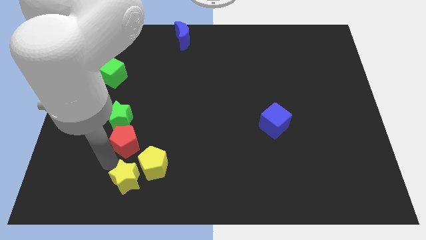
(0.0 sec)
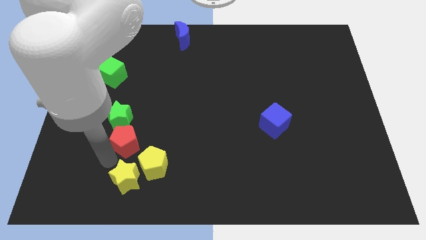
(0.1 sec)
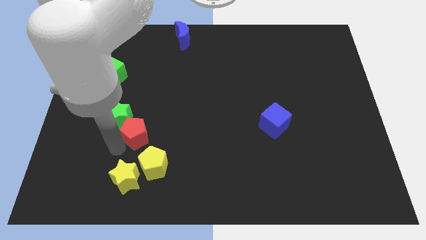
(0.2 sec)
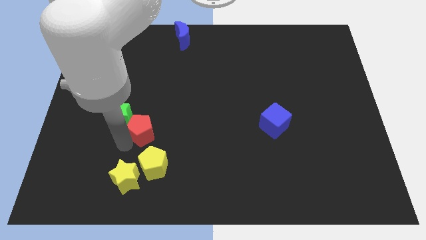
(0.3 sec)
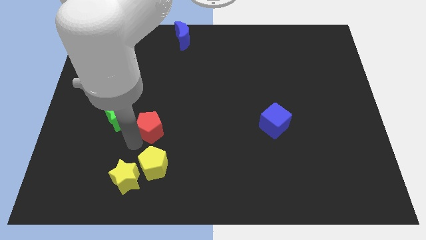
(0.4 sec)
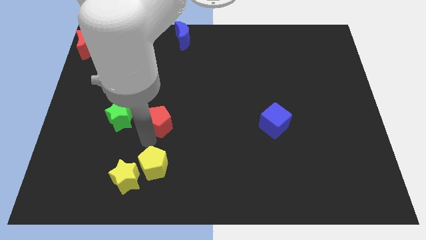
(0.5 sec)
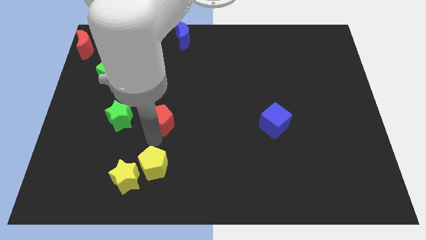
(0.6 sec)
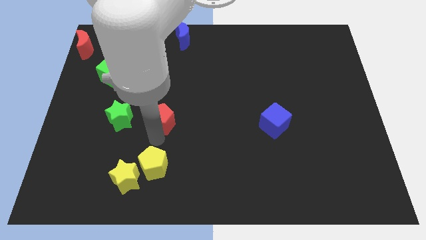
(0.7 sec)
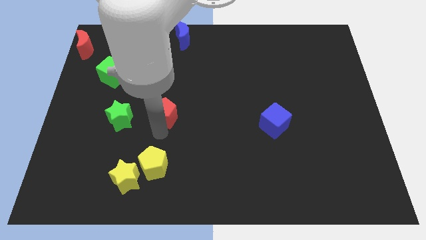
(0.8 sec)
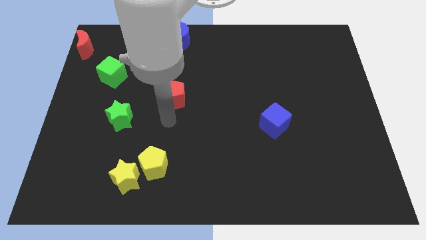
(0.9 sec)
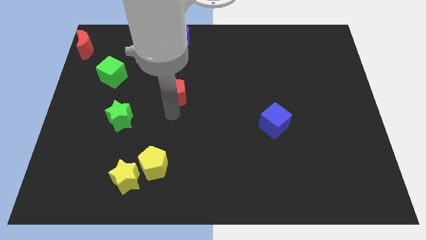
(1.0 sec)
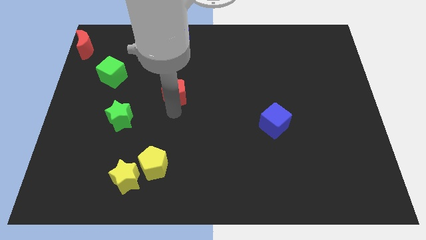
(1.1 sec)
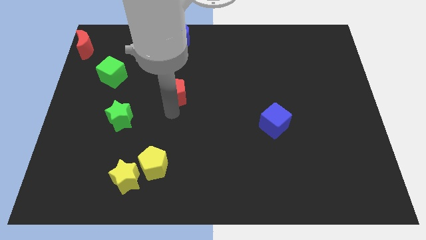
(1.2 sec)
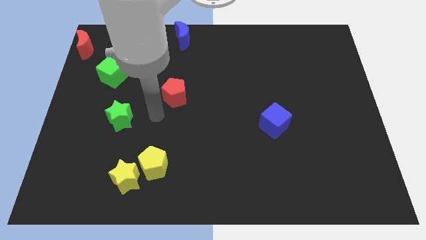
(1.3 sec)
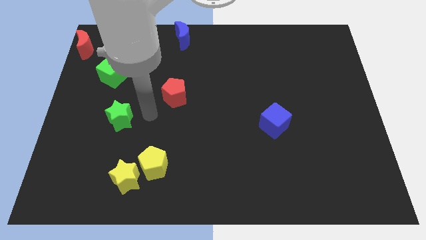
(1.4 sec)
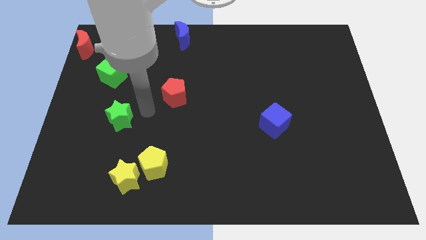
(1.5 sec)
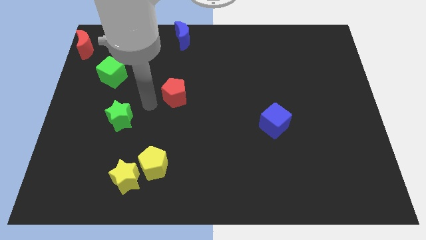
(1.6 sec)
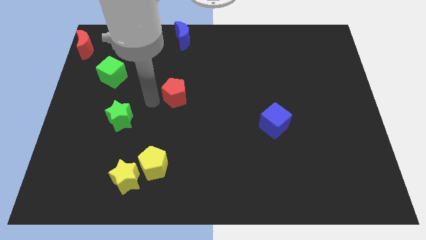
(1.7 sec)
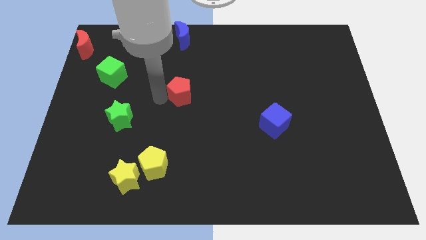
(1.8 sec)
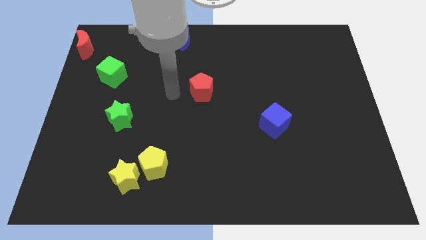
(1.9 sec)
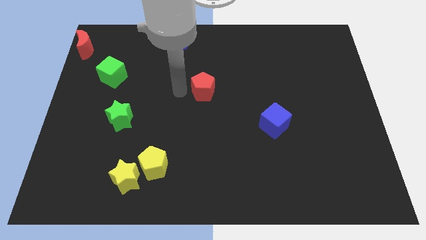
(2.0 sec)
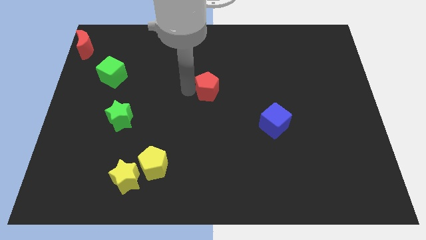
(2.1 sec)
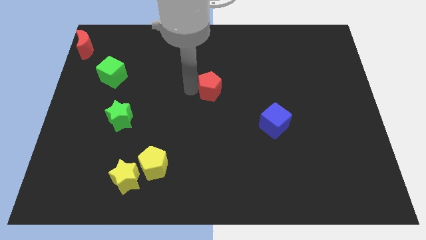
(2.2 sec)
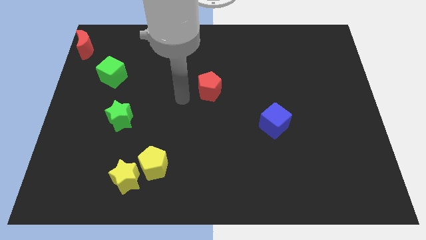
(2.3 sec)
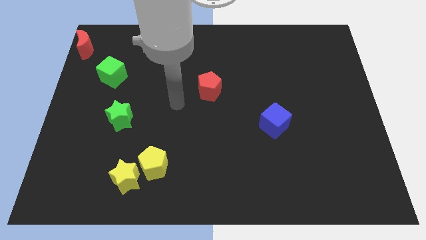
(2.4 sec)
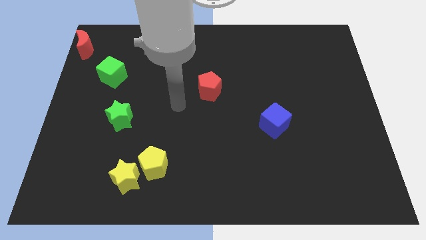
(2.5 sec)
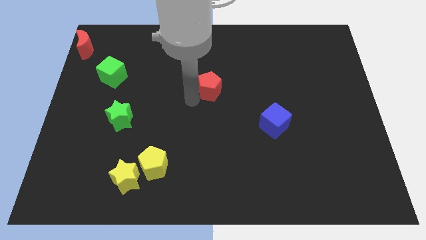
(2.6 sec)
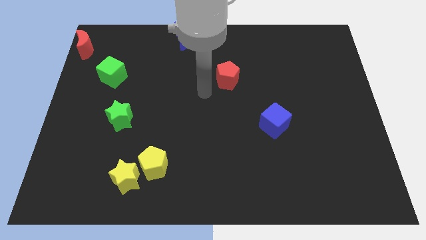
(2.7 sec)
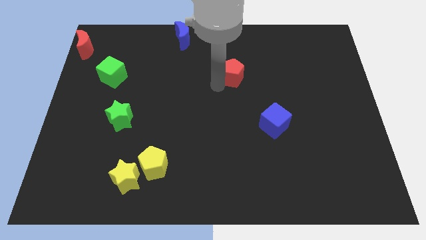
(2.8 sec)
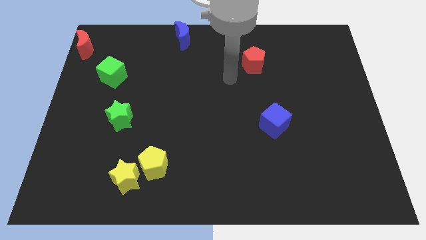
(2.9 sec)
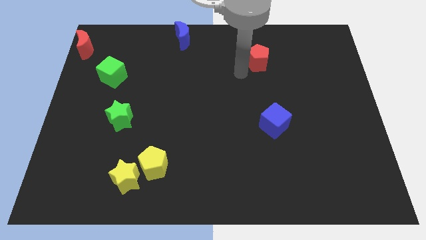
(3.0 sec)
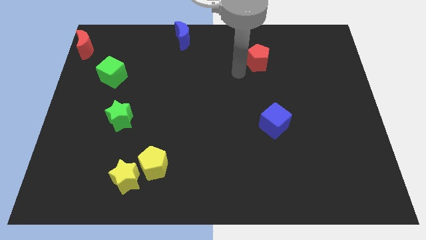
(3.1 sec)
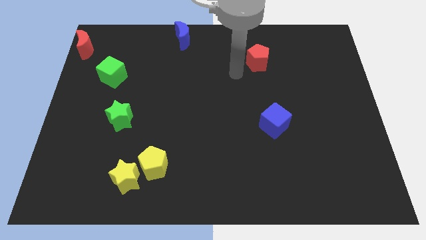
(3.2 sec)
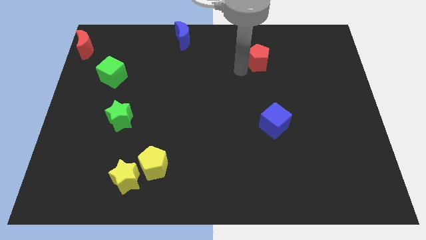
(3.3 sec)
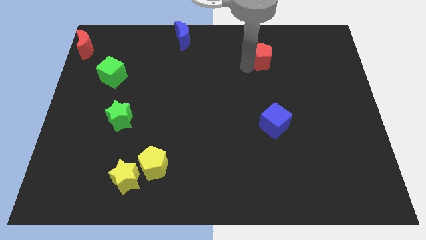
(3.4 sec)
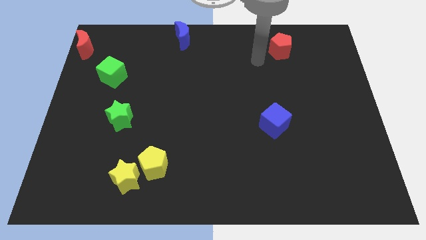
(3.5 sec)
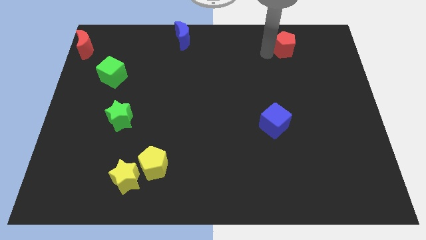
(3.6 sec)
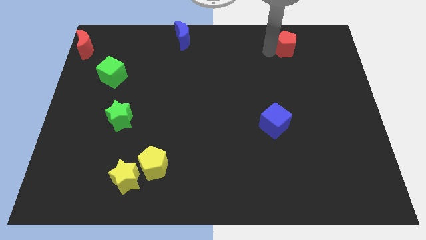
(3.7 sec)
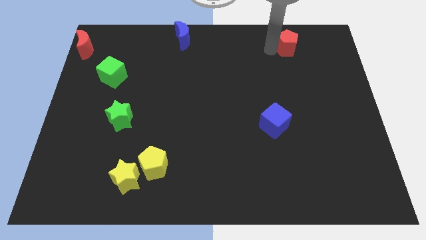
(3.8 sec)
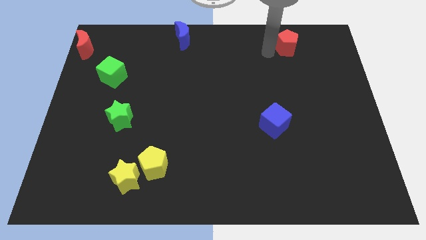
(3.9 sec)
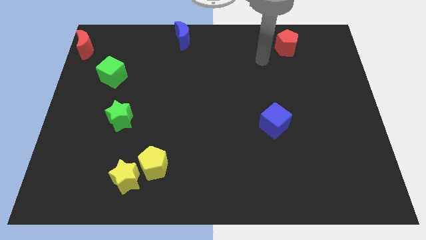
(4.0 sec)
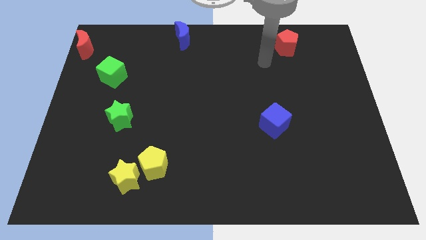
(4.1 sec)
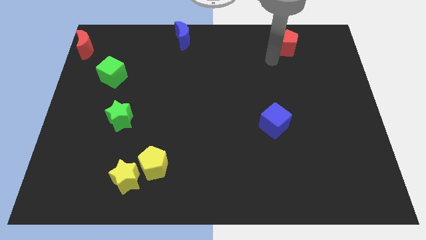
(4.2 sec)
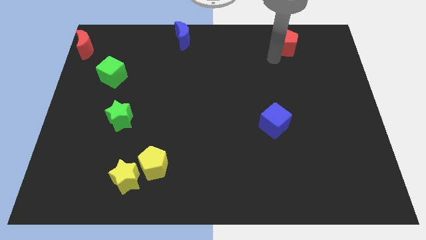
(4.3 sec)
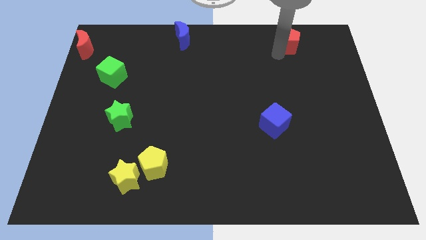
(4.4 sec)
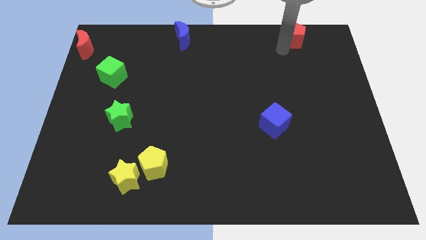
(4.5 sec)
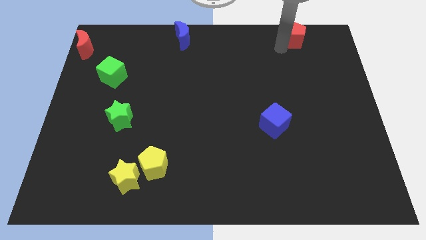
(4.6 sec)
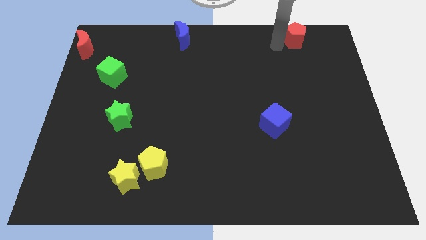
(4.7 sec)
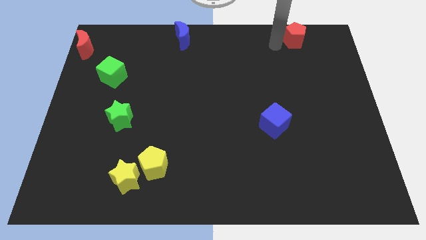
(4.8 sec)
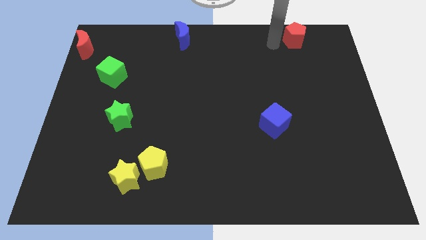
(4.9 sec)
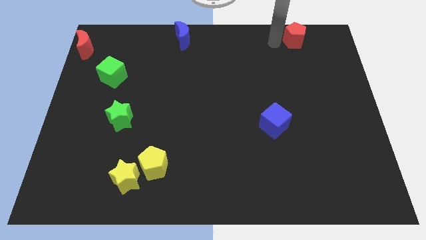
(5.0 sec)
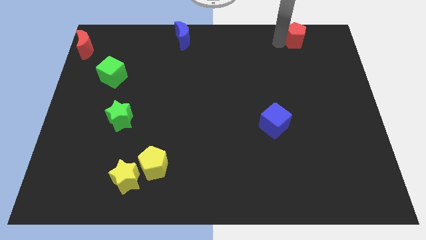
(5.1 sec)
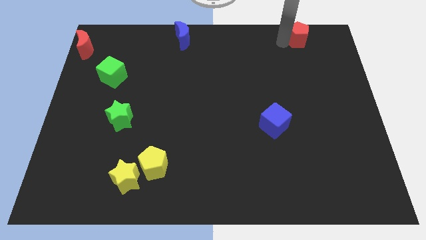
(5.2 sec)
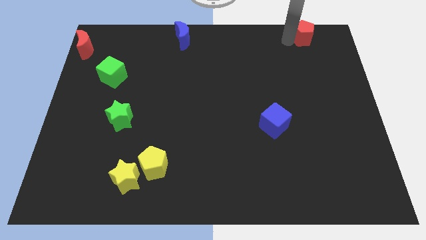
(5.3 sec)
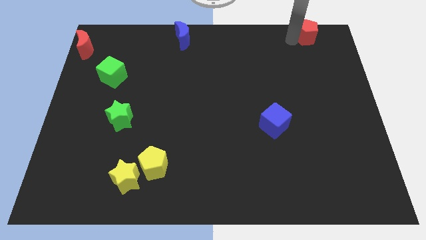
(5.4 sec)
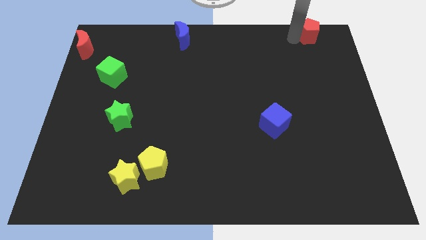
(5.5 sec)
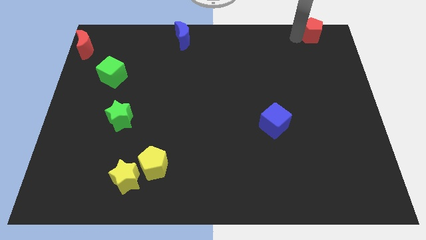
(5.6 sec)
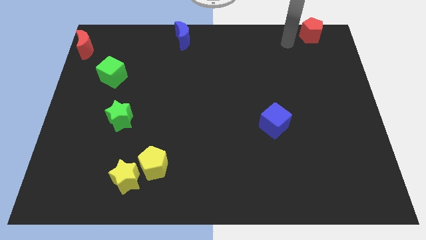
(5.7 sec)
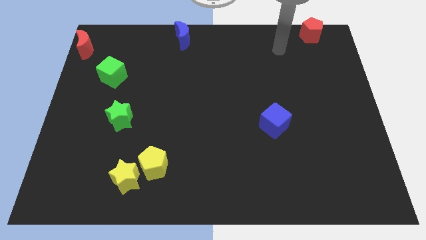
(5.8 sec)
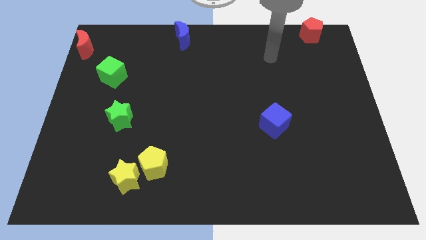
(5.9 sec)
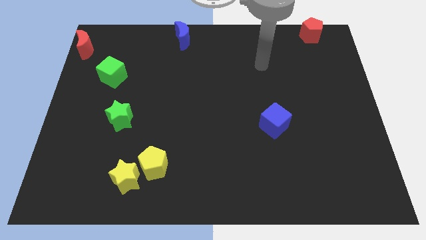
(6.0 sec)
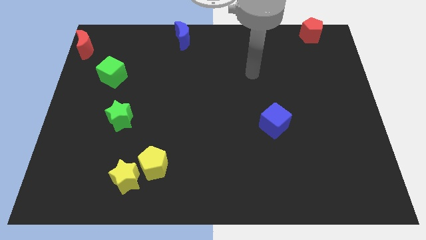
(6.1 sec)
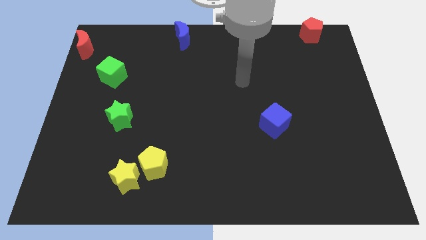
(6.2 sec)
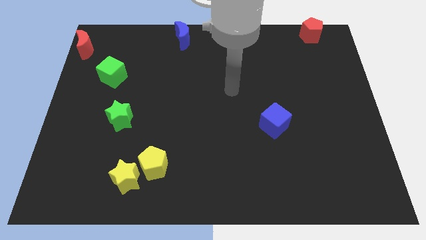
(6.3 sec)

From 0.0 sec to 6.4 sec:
place the red pentagon right to the blue moon

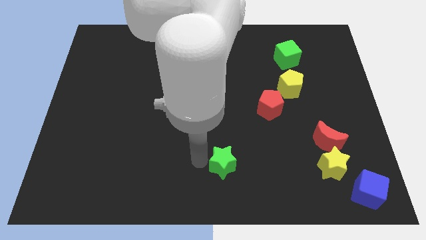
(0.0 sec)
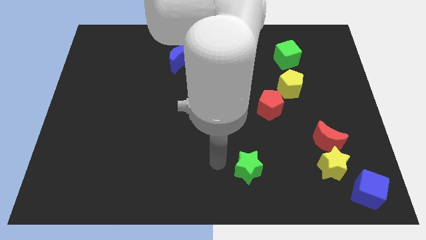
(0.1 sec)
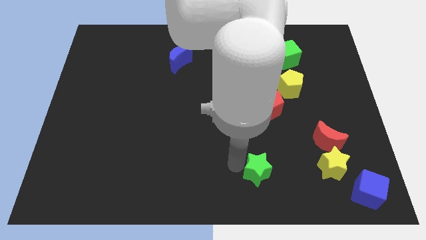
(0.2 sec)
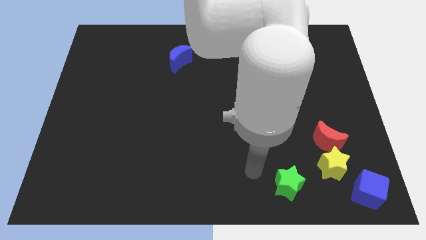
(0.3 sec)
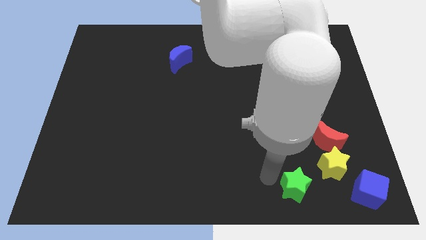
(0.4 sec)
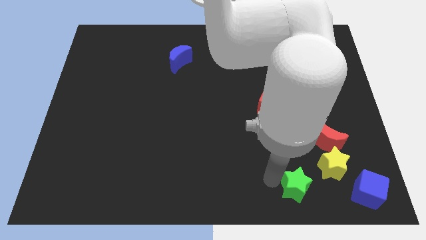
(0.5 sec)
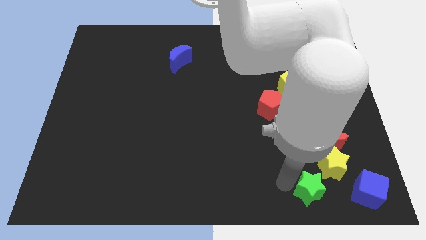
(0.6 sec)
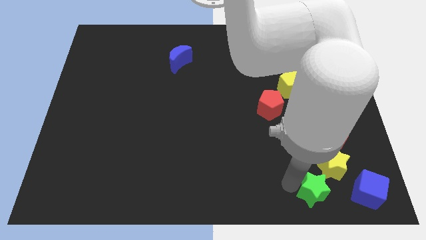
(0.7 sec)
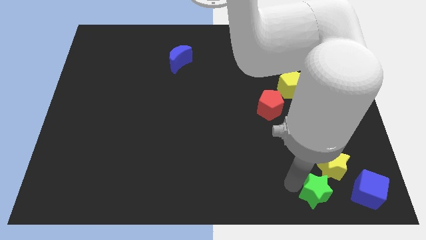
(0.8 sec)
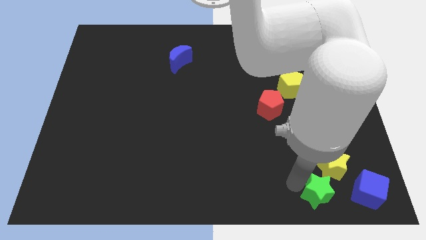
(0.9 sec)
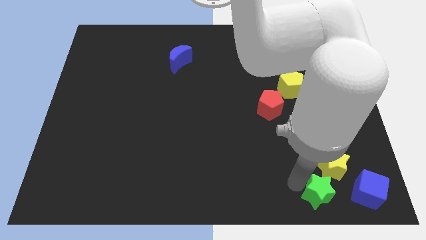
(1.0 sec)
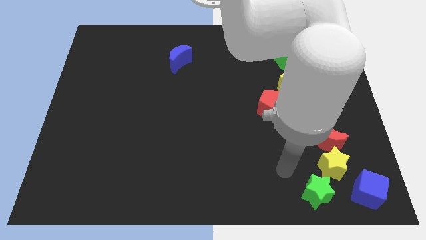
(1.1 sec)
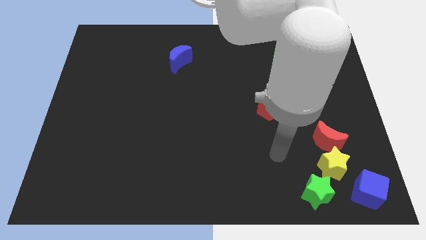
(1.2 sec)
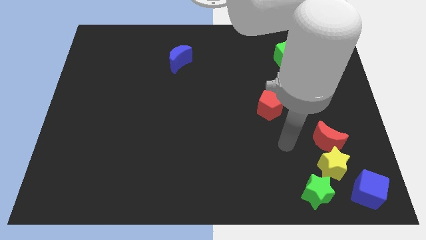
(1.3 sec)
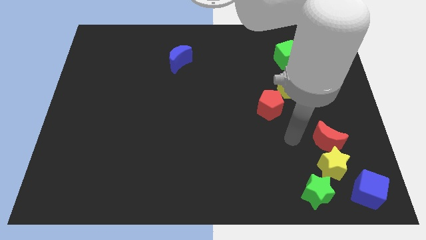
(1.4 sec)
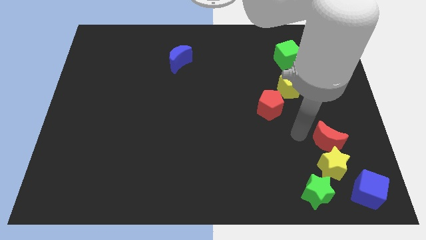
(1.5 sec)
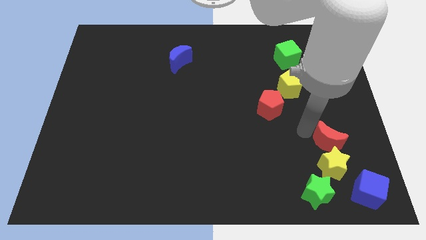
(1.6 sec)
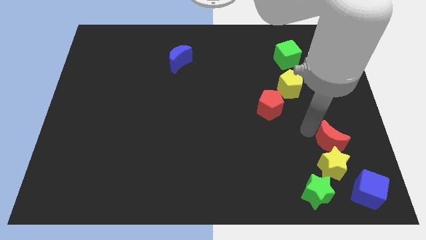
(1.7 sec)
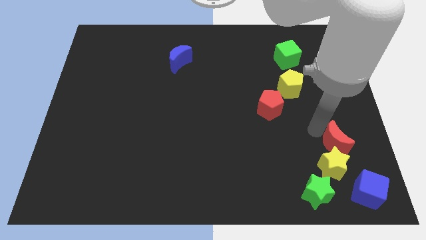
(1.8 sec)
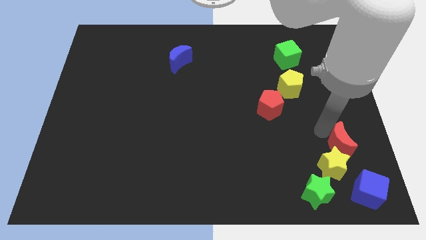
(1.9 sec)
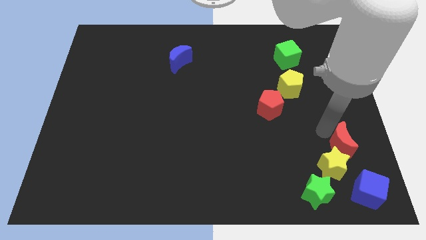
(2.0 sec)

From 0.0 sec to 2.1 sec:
push the green to the bottom right corner of the board

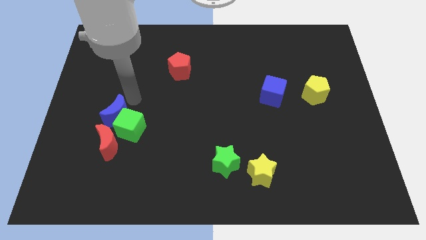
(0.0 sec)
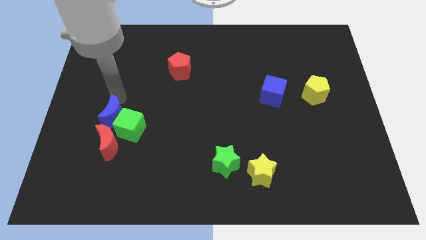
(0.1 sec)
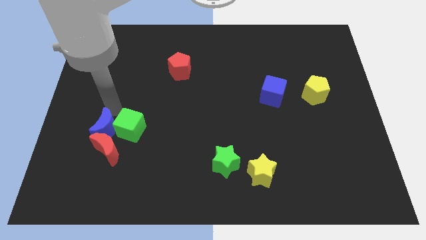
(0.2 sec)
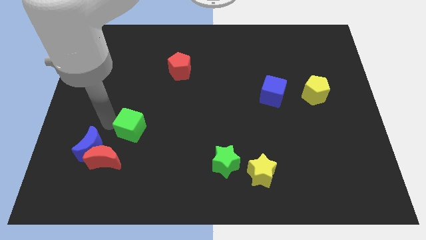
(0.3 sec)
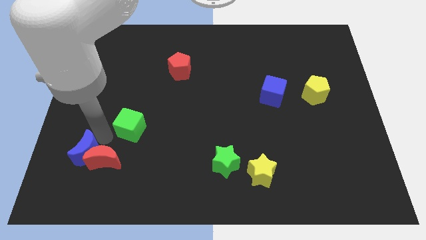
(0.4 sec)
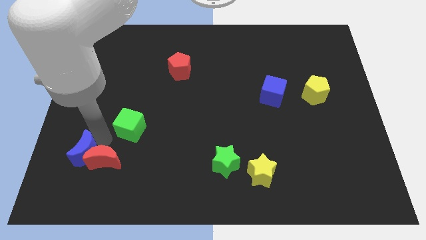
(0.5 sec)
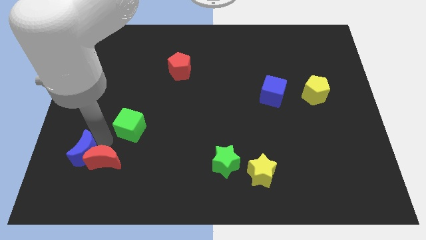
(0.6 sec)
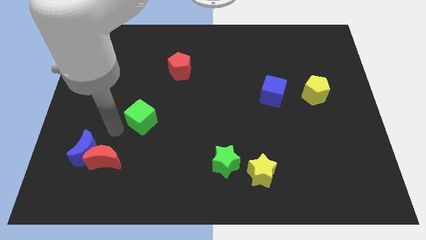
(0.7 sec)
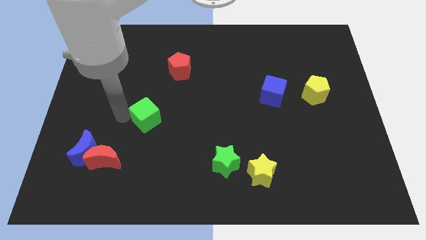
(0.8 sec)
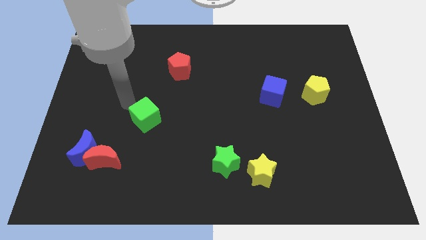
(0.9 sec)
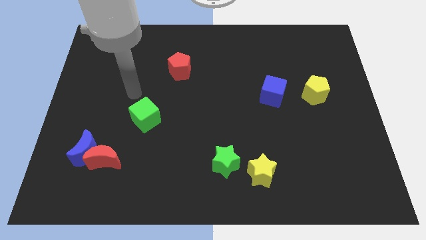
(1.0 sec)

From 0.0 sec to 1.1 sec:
separate the blue moon and green cube
